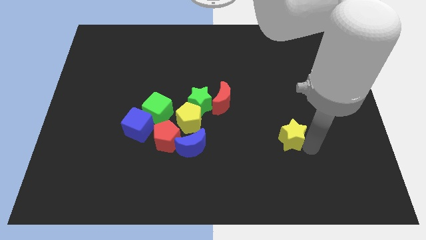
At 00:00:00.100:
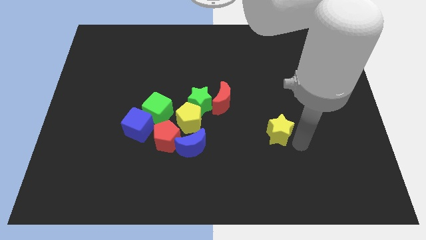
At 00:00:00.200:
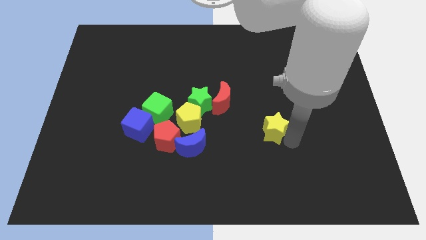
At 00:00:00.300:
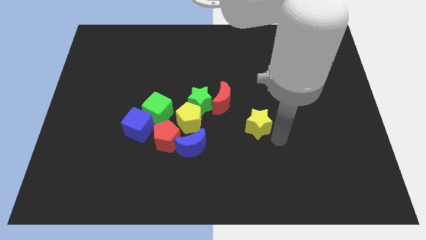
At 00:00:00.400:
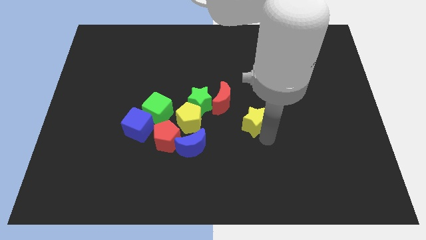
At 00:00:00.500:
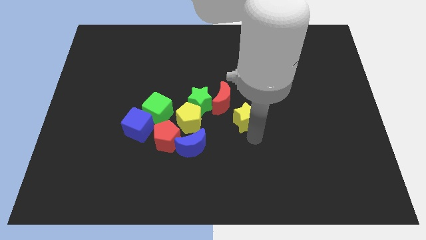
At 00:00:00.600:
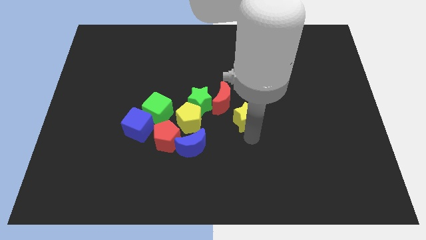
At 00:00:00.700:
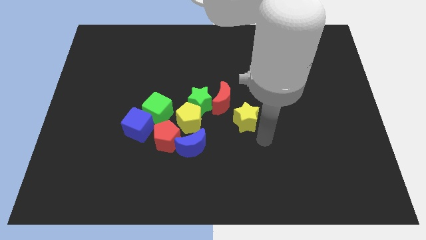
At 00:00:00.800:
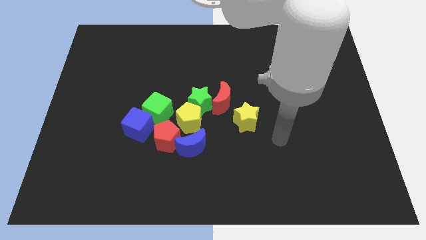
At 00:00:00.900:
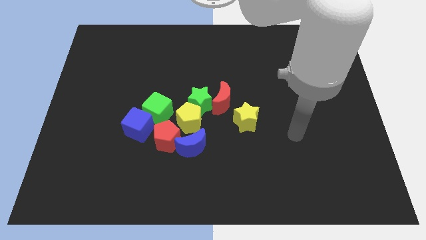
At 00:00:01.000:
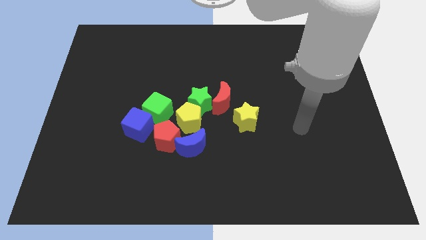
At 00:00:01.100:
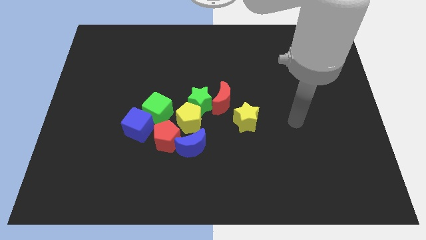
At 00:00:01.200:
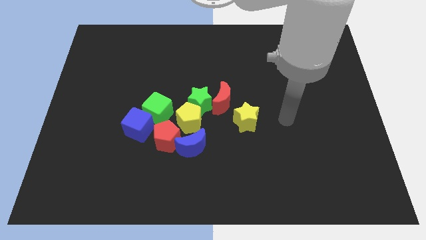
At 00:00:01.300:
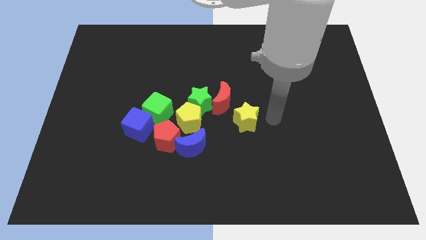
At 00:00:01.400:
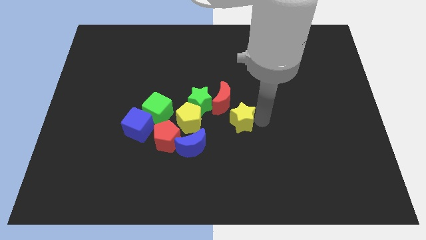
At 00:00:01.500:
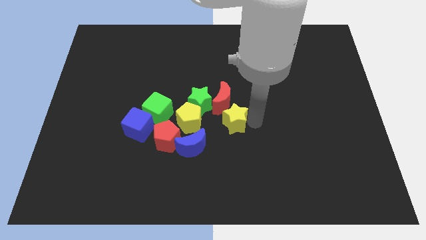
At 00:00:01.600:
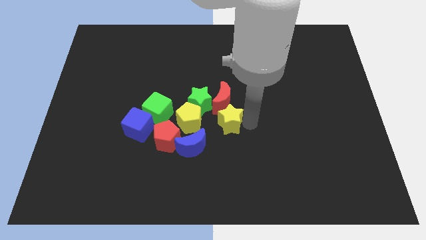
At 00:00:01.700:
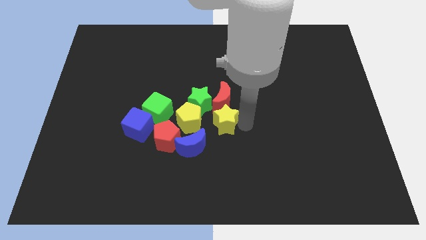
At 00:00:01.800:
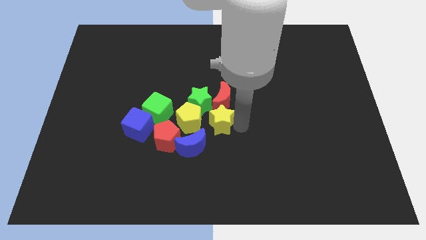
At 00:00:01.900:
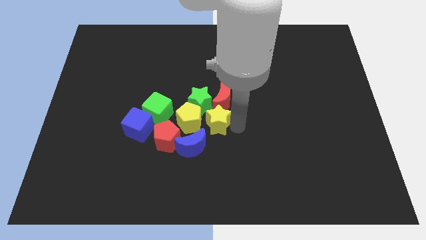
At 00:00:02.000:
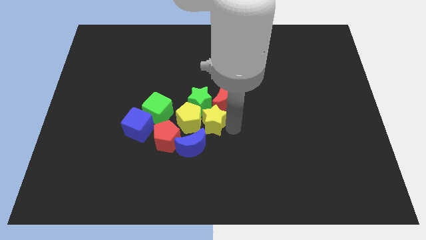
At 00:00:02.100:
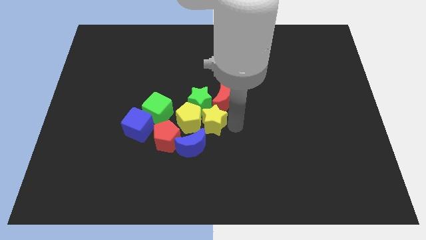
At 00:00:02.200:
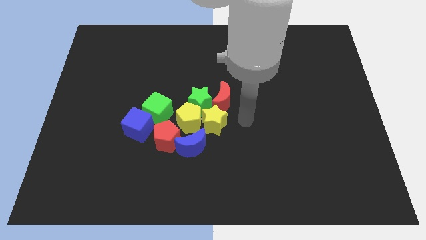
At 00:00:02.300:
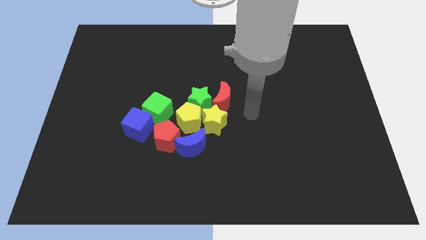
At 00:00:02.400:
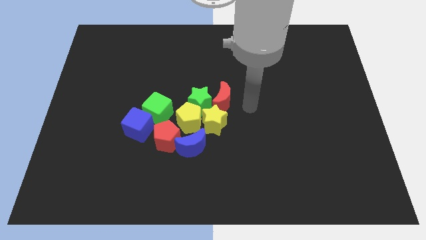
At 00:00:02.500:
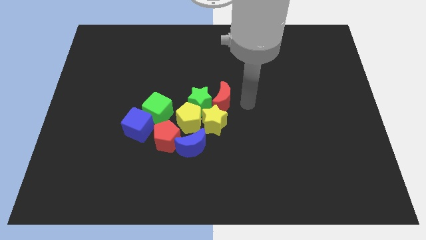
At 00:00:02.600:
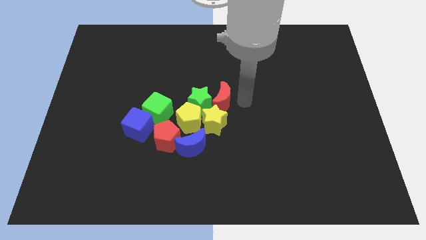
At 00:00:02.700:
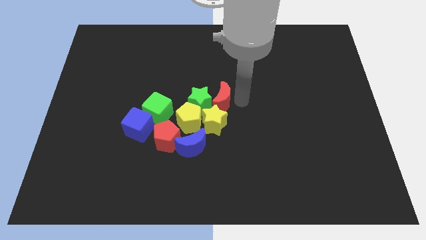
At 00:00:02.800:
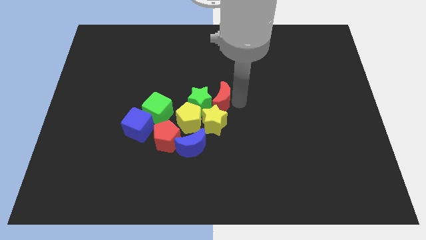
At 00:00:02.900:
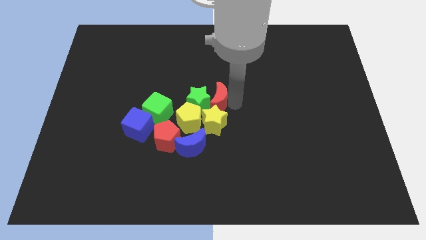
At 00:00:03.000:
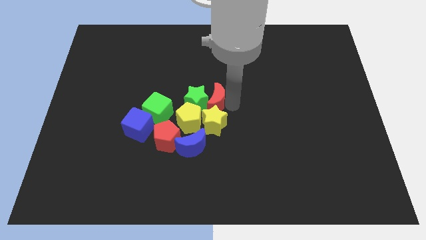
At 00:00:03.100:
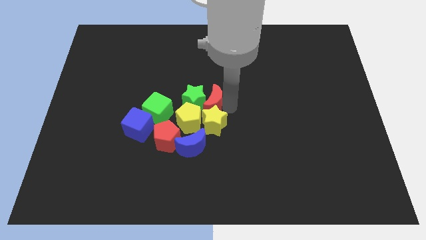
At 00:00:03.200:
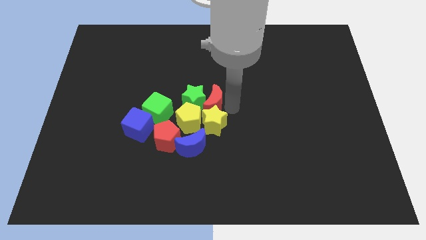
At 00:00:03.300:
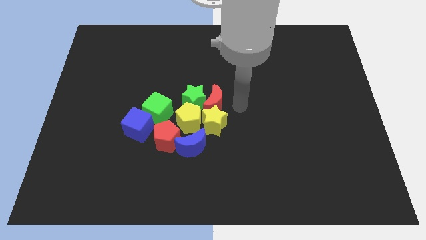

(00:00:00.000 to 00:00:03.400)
push the red moon into the group of blocks

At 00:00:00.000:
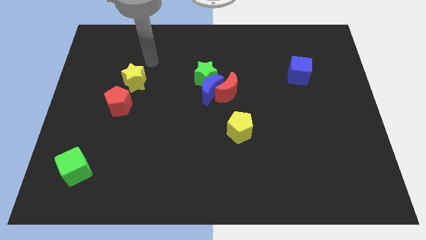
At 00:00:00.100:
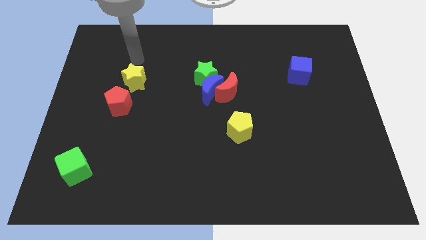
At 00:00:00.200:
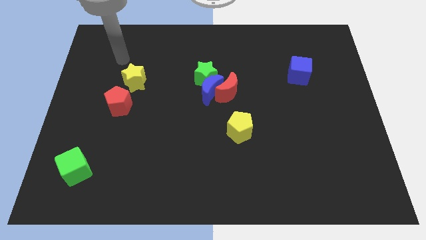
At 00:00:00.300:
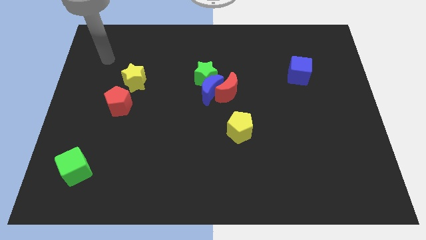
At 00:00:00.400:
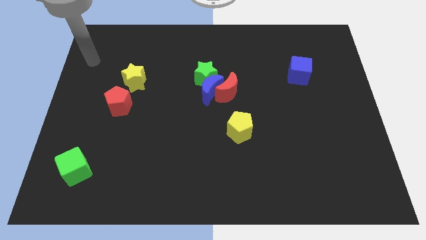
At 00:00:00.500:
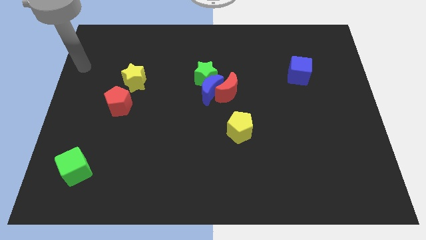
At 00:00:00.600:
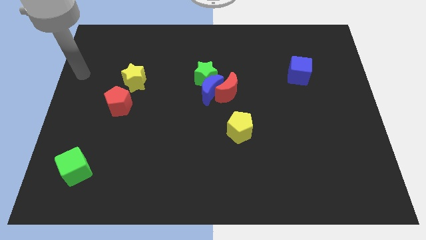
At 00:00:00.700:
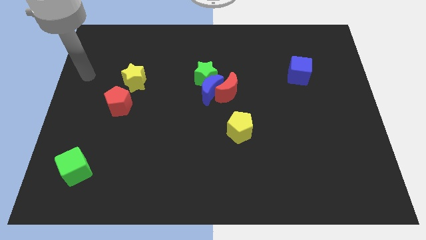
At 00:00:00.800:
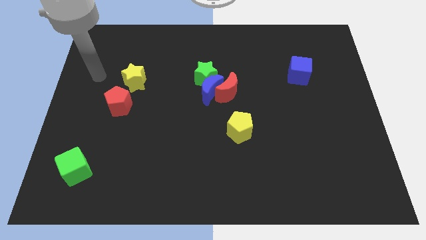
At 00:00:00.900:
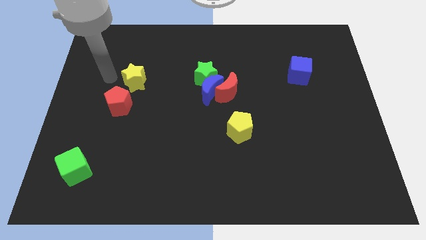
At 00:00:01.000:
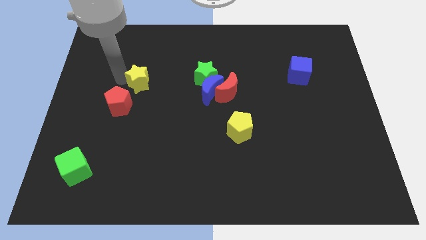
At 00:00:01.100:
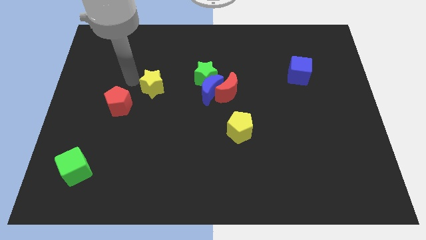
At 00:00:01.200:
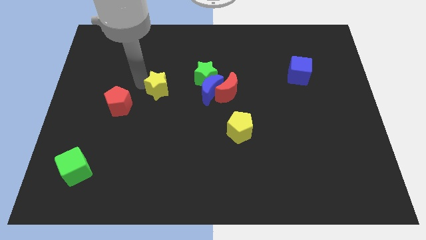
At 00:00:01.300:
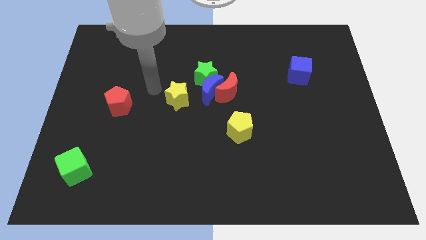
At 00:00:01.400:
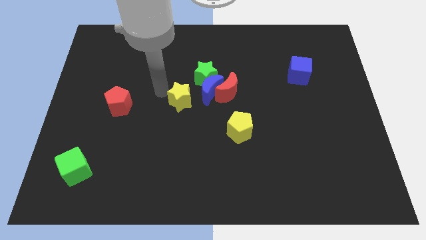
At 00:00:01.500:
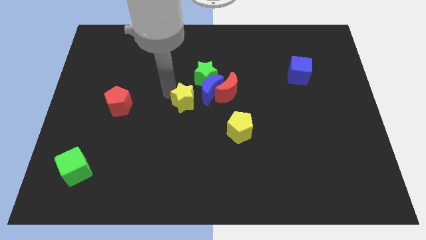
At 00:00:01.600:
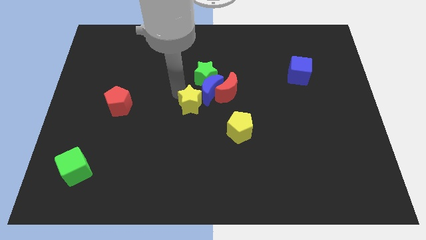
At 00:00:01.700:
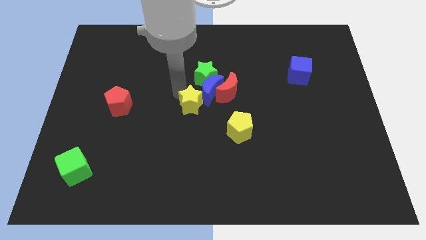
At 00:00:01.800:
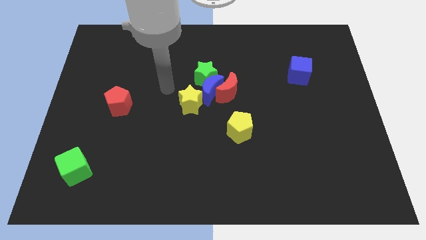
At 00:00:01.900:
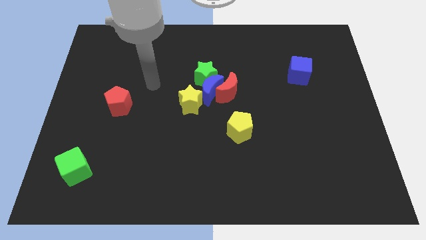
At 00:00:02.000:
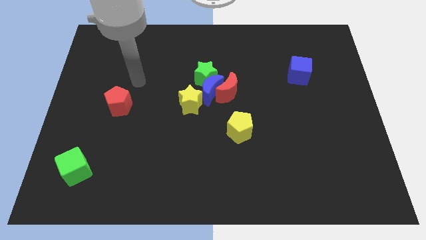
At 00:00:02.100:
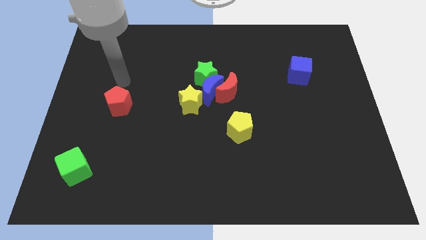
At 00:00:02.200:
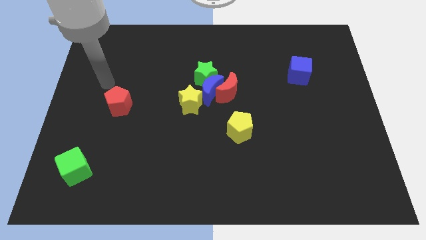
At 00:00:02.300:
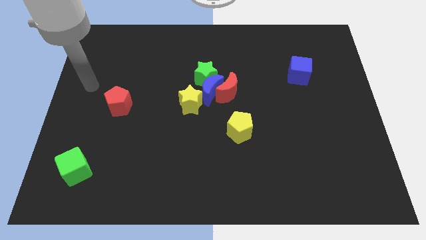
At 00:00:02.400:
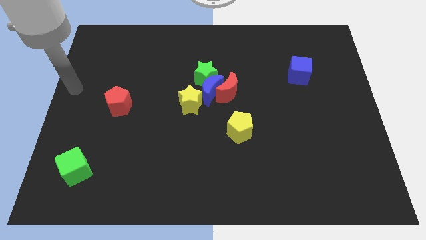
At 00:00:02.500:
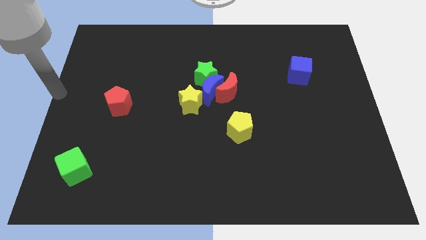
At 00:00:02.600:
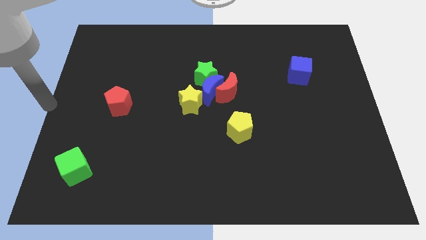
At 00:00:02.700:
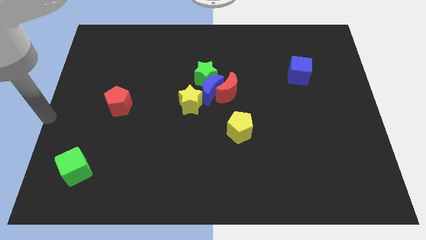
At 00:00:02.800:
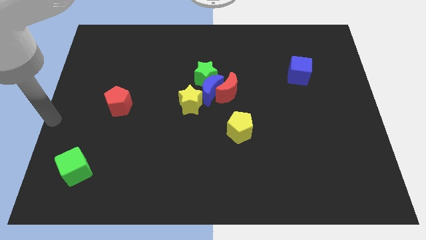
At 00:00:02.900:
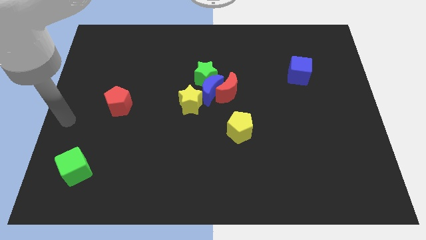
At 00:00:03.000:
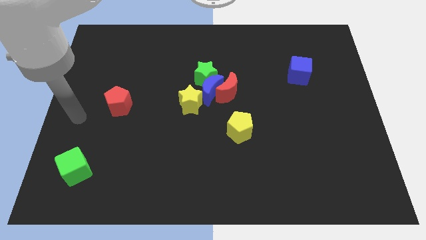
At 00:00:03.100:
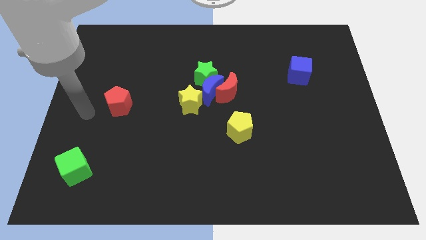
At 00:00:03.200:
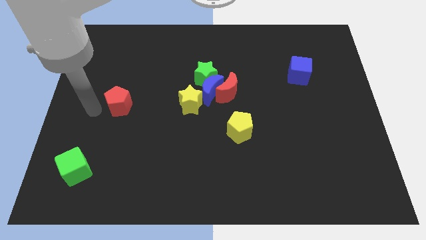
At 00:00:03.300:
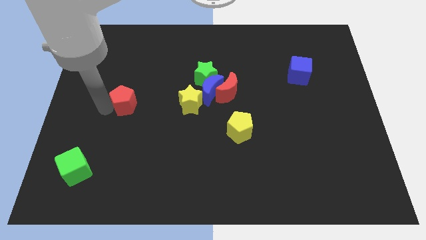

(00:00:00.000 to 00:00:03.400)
place the arm left to the red pentagon

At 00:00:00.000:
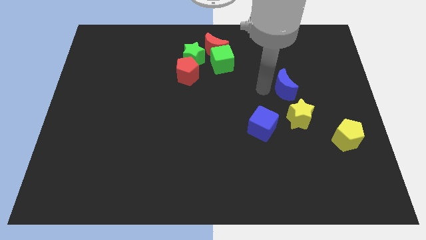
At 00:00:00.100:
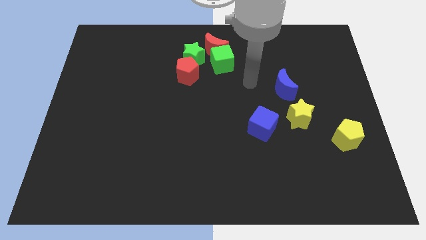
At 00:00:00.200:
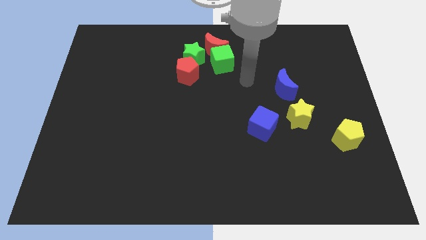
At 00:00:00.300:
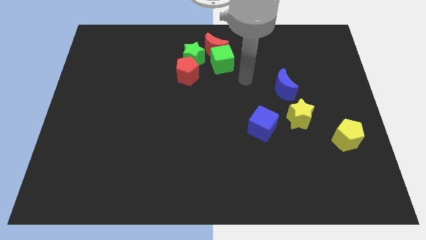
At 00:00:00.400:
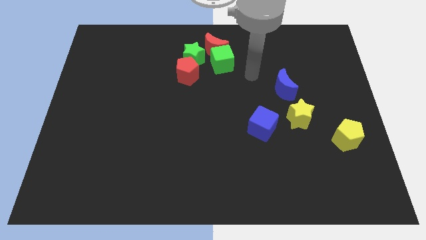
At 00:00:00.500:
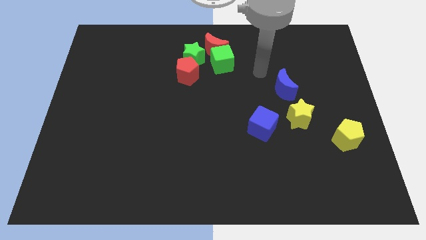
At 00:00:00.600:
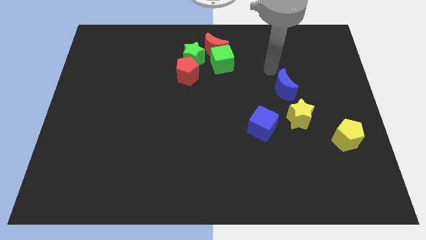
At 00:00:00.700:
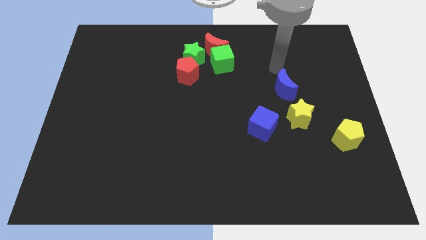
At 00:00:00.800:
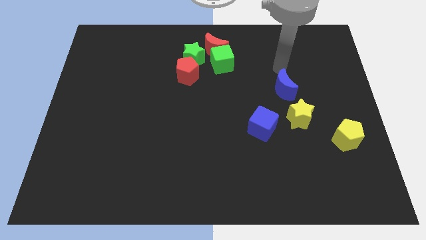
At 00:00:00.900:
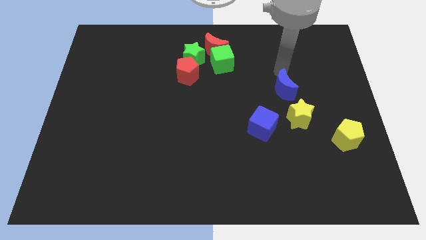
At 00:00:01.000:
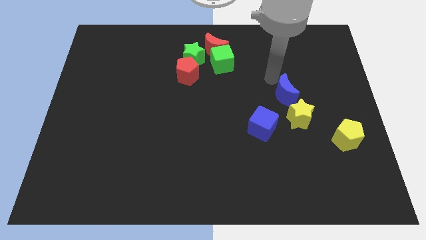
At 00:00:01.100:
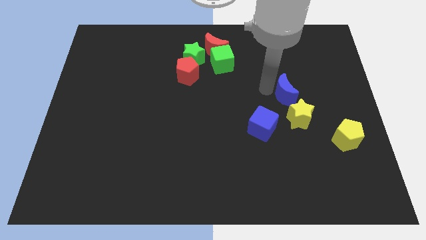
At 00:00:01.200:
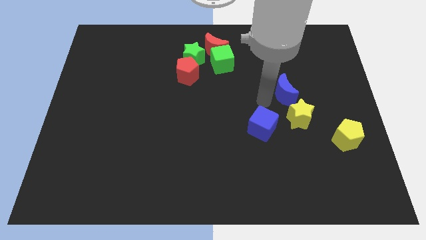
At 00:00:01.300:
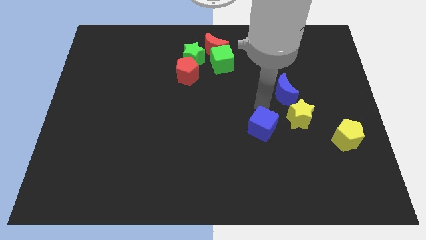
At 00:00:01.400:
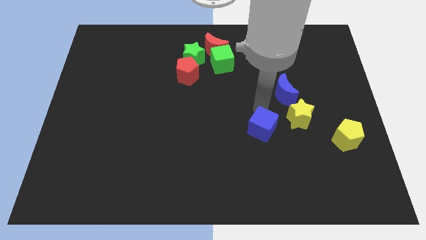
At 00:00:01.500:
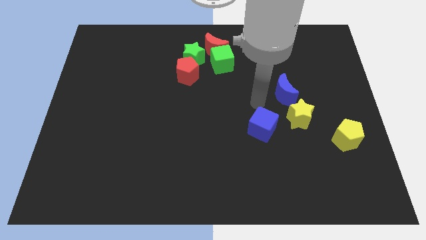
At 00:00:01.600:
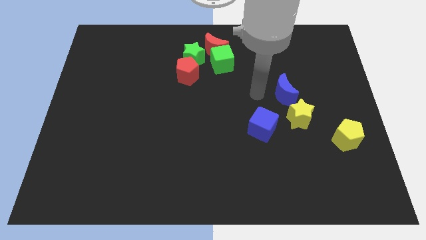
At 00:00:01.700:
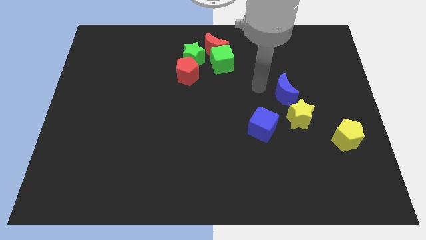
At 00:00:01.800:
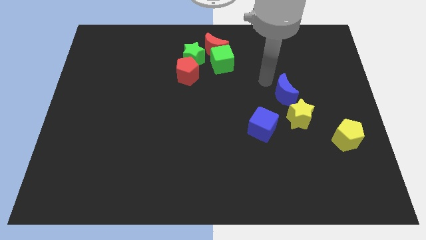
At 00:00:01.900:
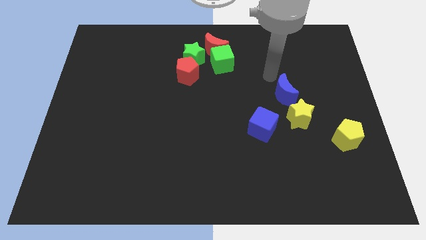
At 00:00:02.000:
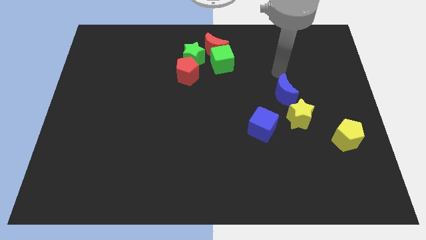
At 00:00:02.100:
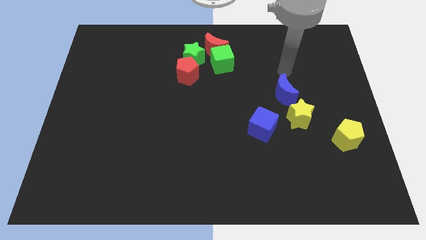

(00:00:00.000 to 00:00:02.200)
move your arm to the top of the blue moon

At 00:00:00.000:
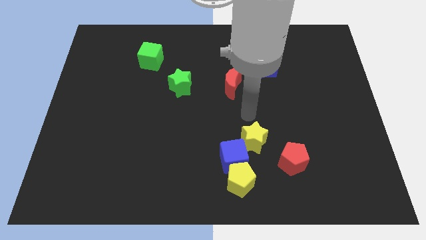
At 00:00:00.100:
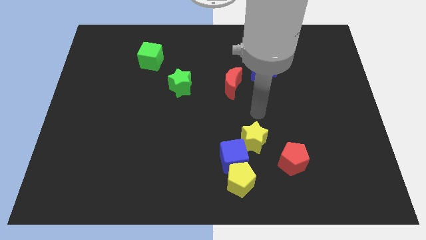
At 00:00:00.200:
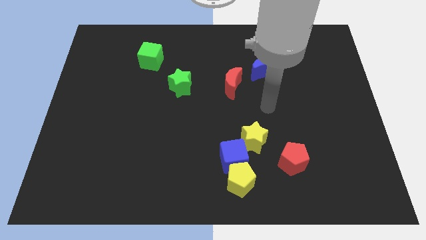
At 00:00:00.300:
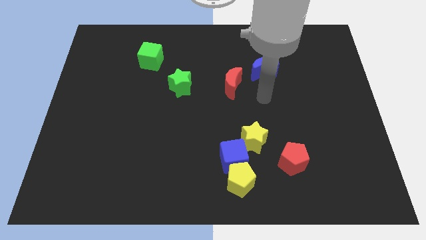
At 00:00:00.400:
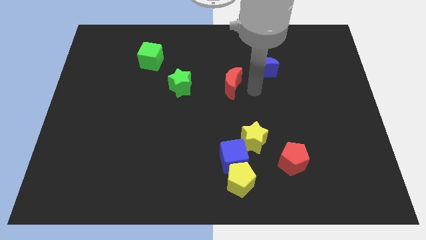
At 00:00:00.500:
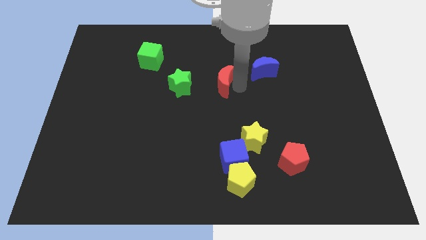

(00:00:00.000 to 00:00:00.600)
move arm towards red moon
